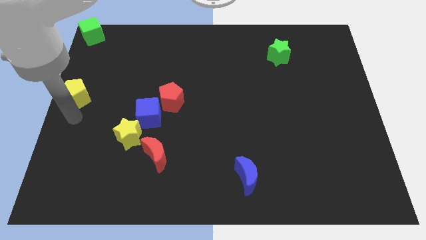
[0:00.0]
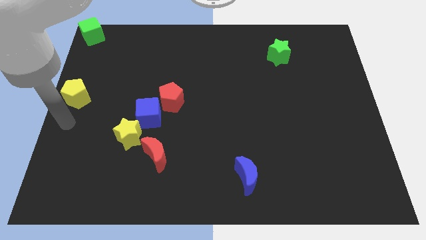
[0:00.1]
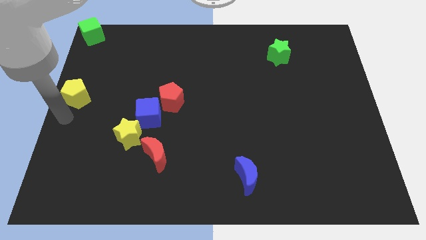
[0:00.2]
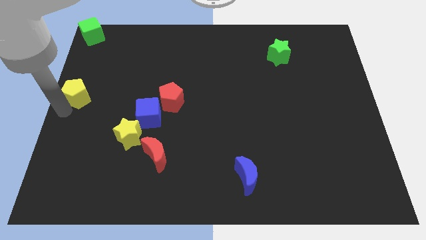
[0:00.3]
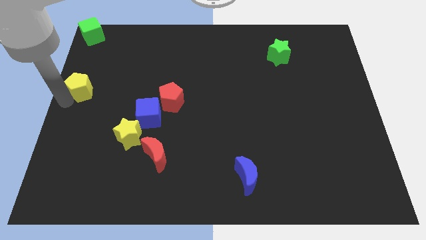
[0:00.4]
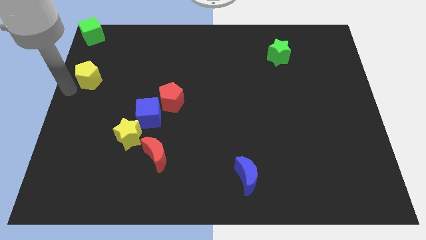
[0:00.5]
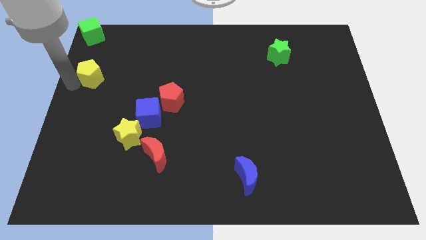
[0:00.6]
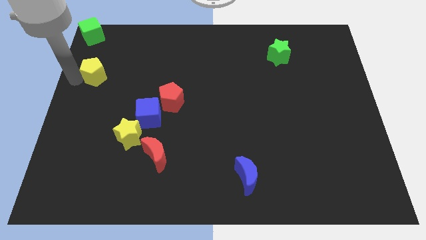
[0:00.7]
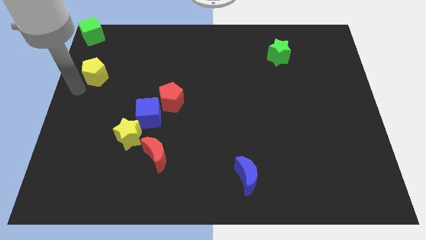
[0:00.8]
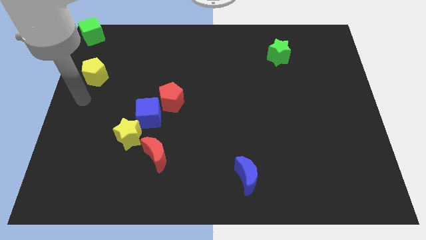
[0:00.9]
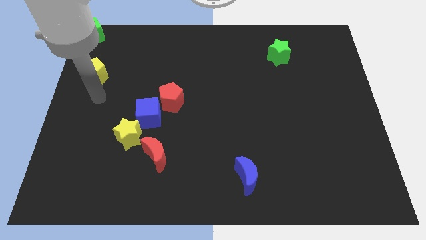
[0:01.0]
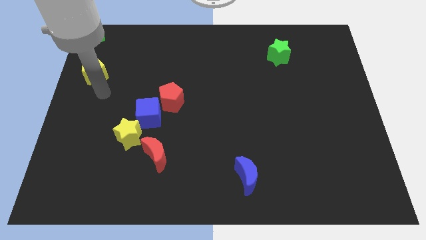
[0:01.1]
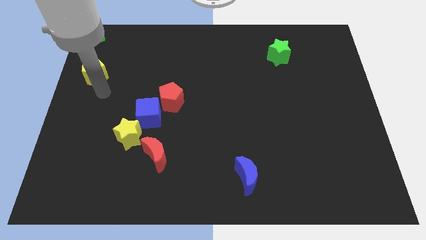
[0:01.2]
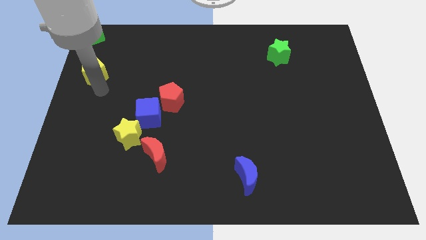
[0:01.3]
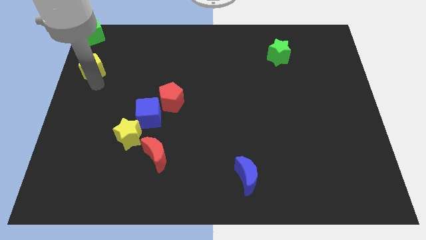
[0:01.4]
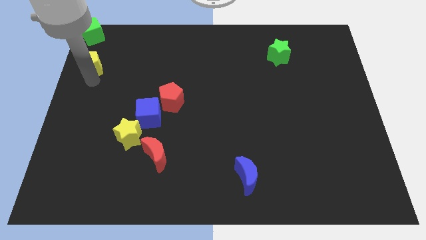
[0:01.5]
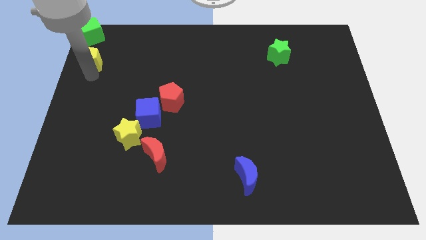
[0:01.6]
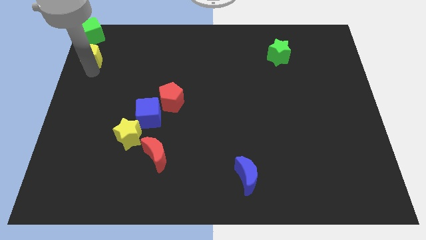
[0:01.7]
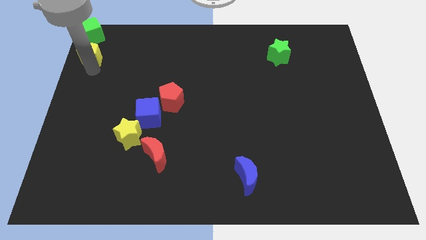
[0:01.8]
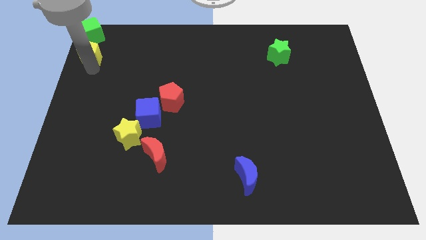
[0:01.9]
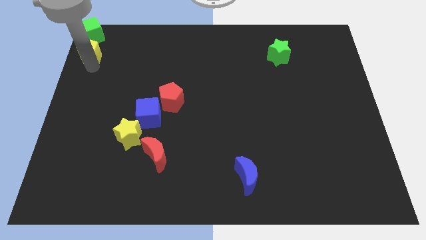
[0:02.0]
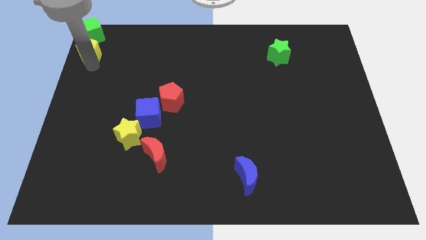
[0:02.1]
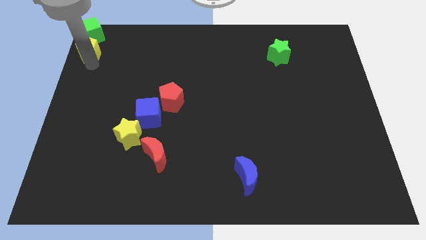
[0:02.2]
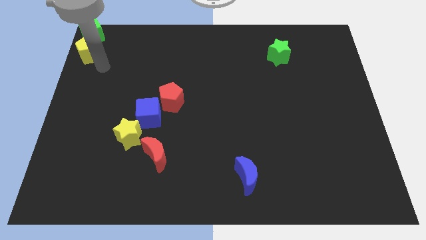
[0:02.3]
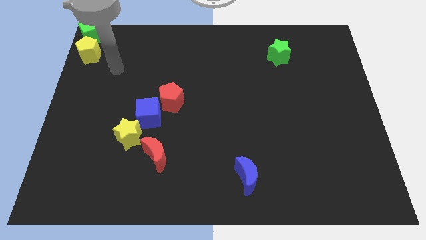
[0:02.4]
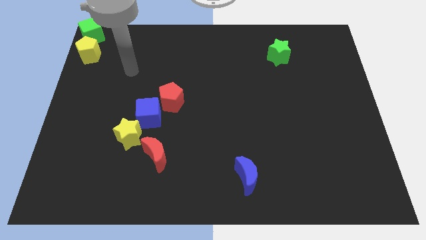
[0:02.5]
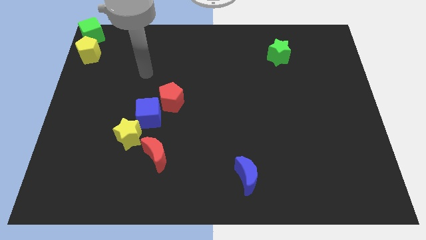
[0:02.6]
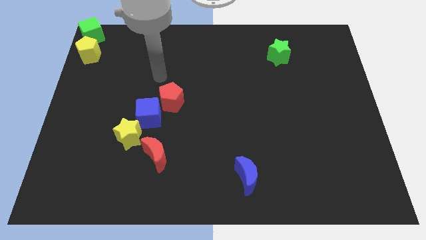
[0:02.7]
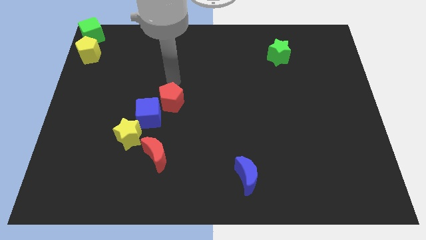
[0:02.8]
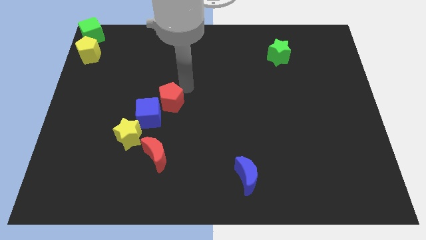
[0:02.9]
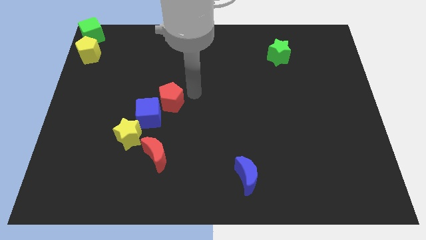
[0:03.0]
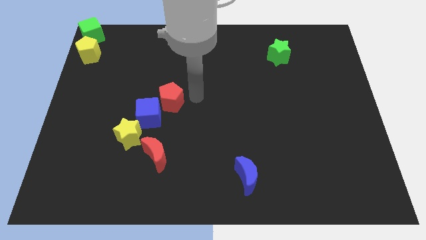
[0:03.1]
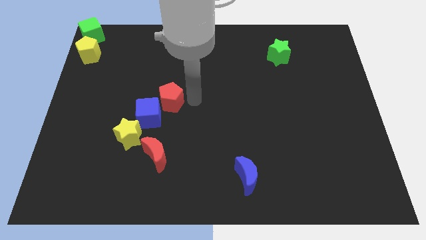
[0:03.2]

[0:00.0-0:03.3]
move yellow pentagon close to green cube

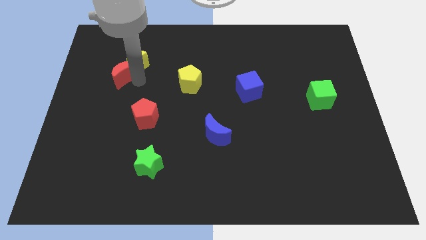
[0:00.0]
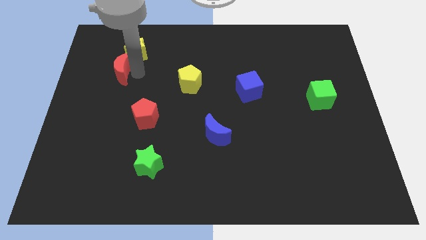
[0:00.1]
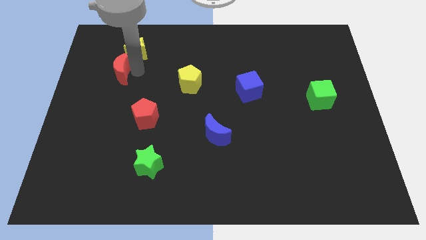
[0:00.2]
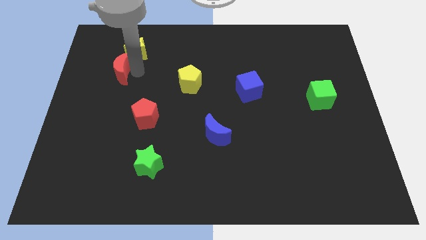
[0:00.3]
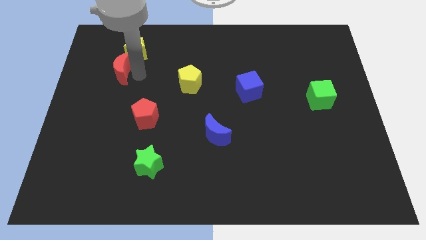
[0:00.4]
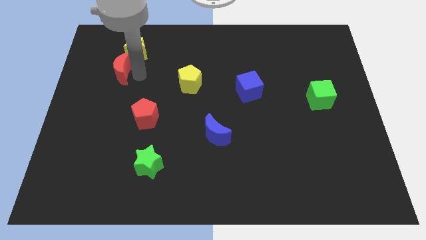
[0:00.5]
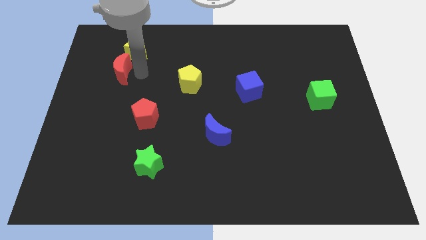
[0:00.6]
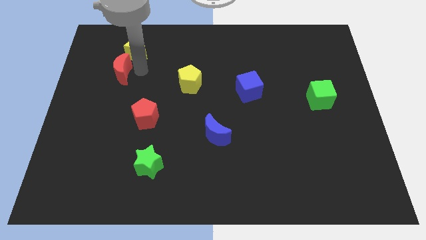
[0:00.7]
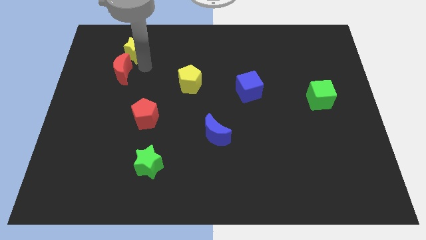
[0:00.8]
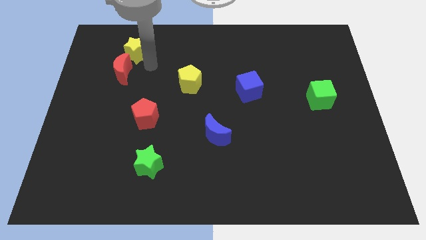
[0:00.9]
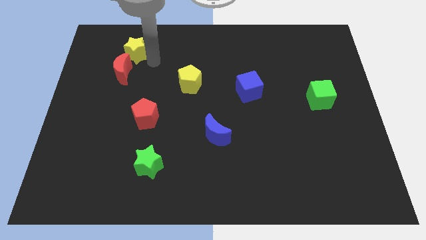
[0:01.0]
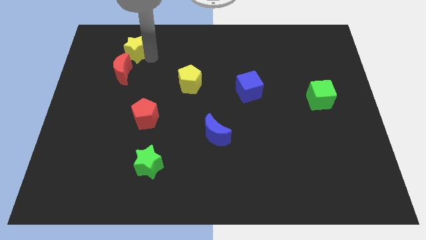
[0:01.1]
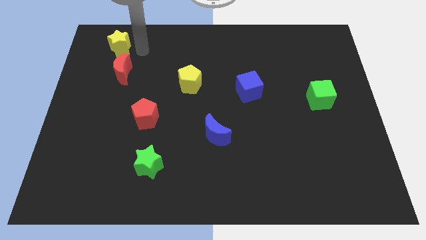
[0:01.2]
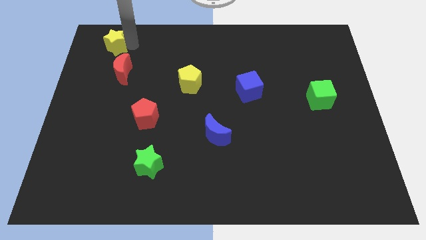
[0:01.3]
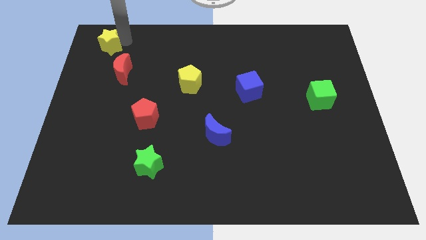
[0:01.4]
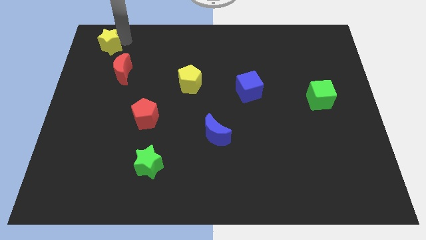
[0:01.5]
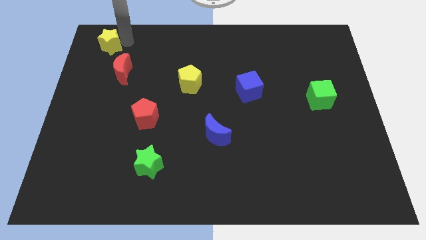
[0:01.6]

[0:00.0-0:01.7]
separate the yellow star and the red moon from each others

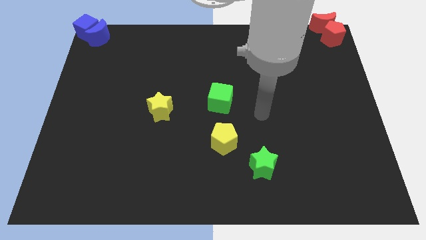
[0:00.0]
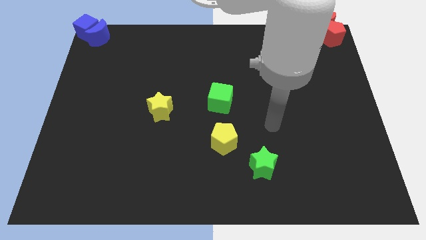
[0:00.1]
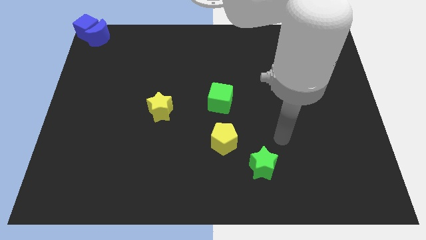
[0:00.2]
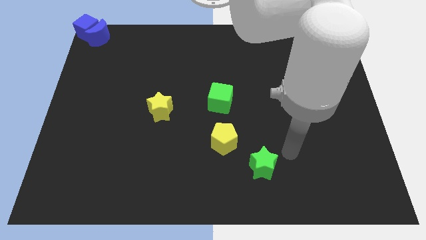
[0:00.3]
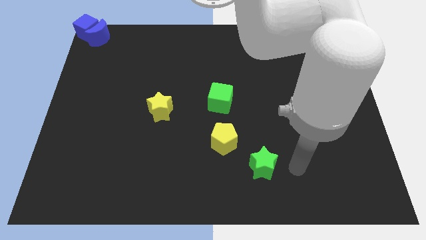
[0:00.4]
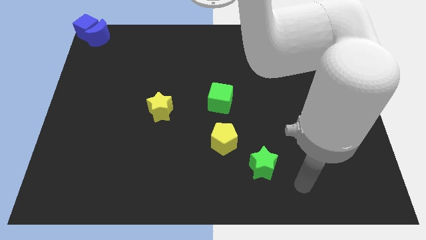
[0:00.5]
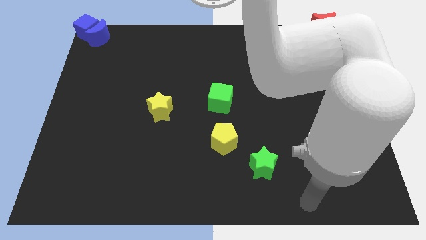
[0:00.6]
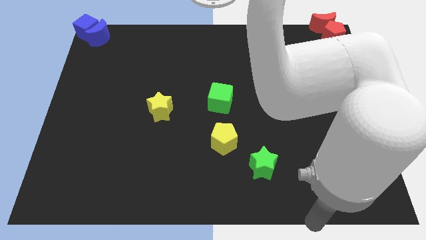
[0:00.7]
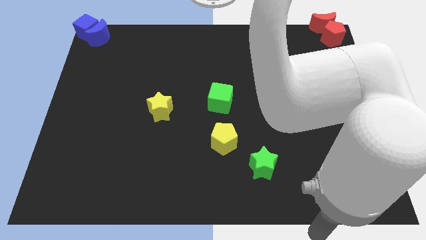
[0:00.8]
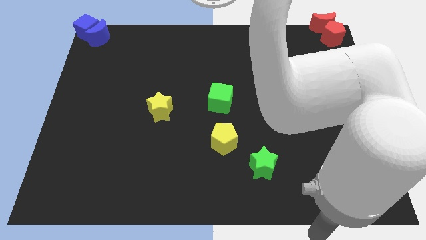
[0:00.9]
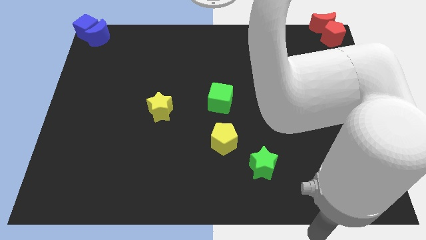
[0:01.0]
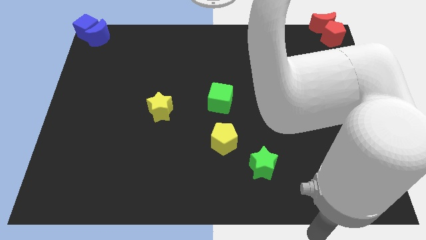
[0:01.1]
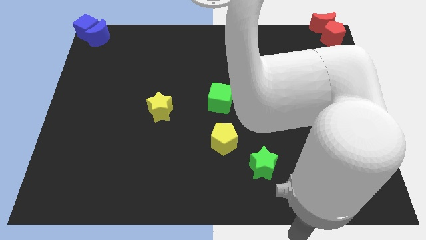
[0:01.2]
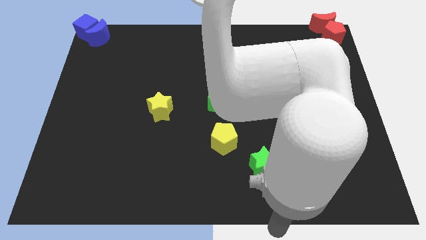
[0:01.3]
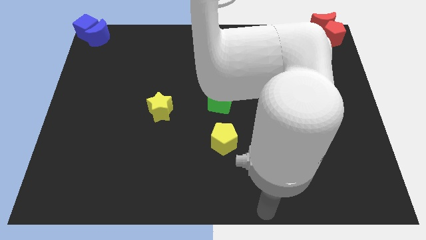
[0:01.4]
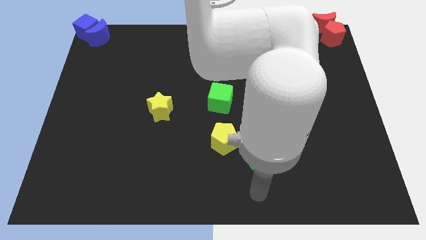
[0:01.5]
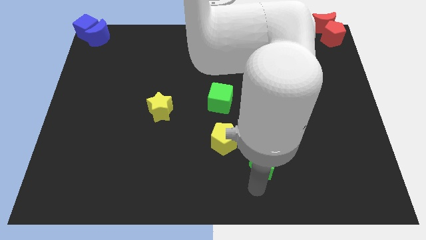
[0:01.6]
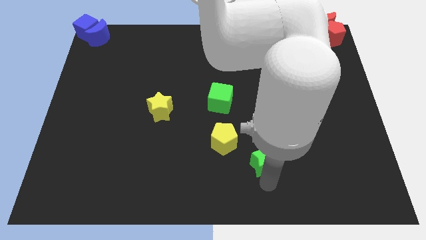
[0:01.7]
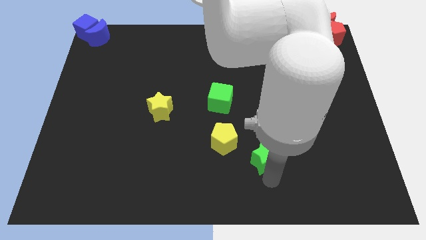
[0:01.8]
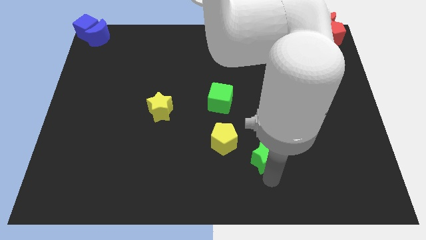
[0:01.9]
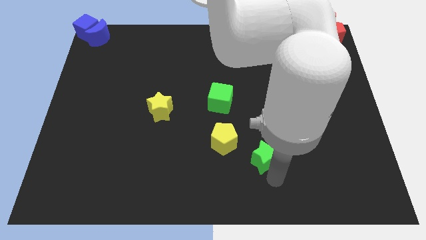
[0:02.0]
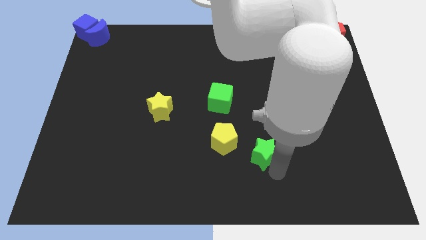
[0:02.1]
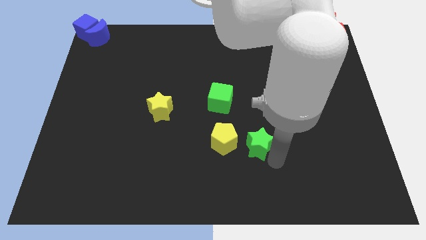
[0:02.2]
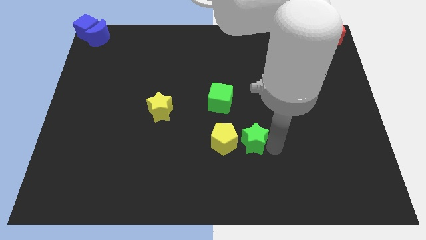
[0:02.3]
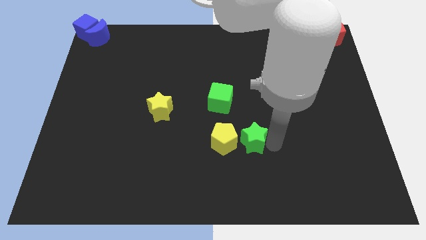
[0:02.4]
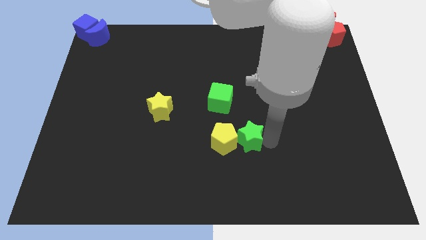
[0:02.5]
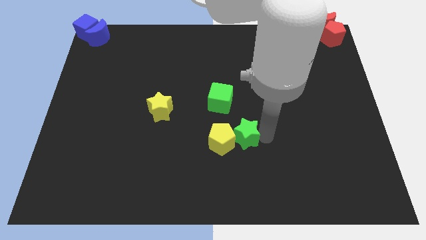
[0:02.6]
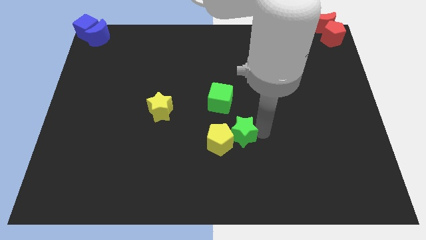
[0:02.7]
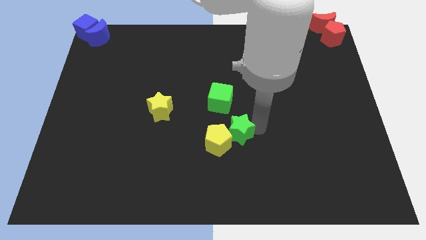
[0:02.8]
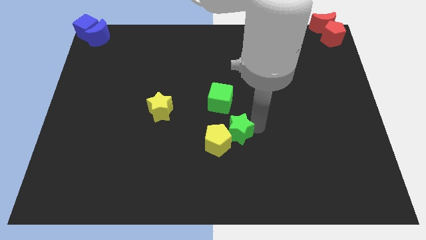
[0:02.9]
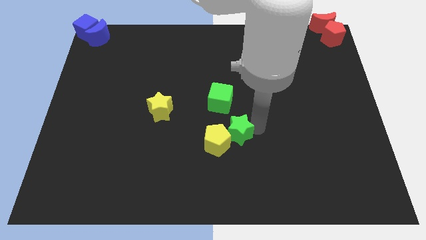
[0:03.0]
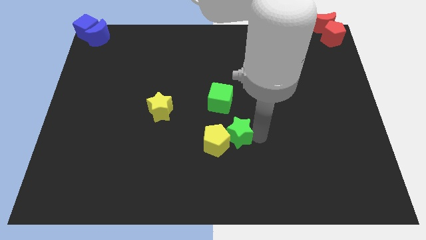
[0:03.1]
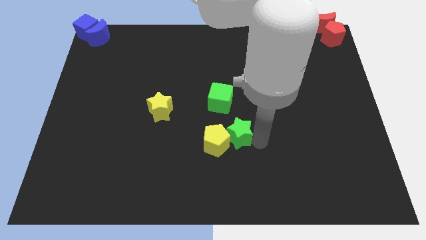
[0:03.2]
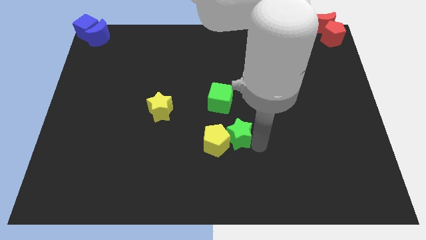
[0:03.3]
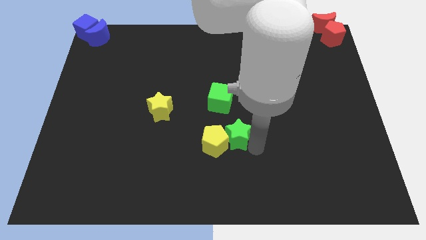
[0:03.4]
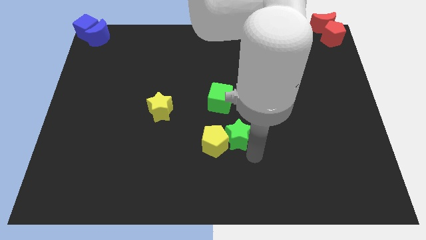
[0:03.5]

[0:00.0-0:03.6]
push the green star into the right side of the yellow pentagon

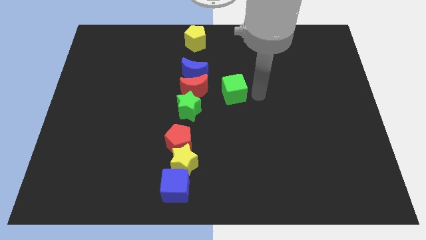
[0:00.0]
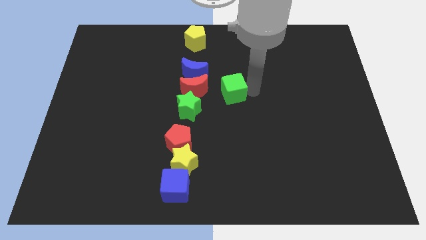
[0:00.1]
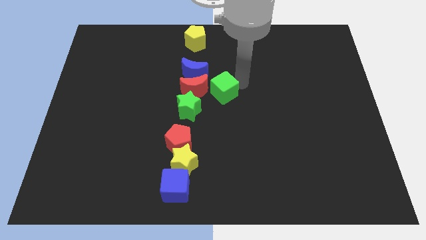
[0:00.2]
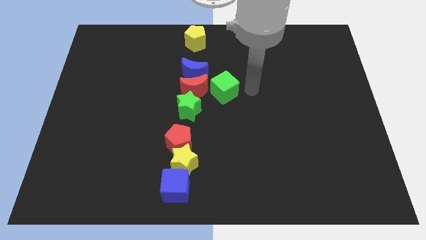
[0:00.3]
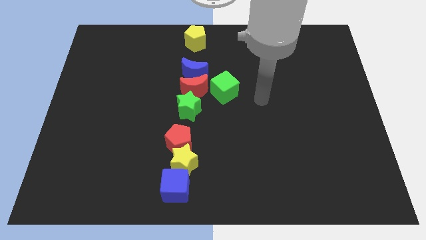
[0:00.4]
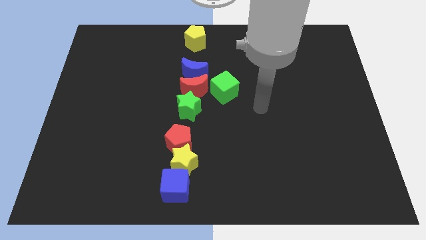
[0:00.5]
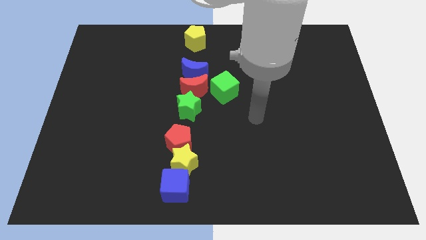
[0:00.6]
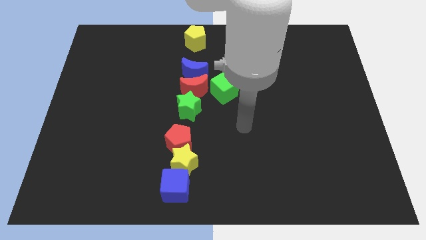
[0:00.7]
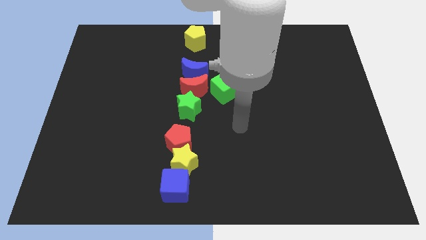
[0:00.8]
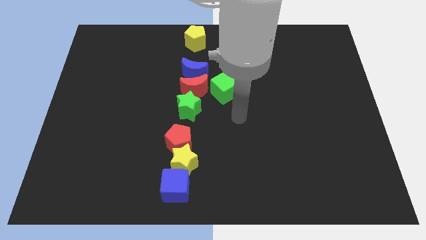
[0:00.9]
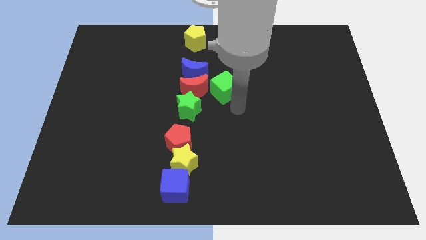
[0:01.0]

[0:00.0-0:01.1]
place the green cube right to the red crescent
